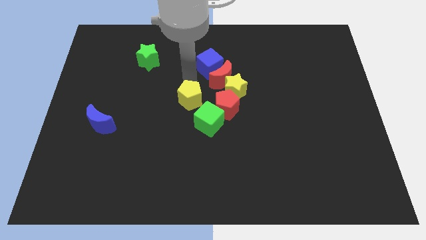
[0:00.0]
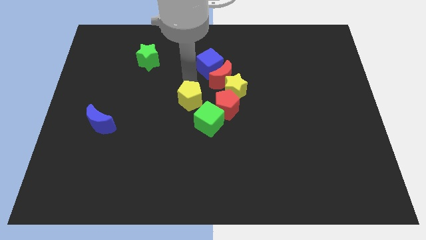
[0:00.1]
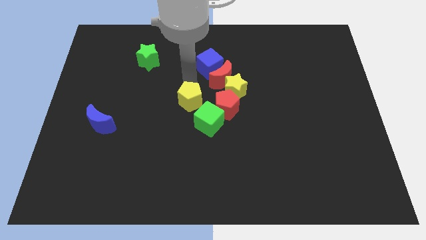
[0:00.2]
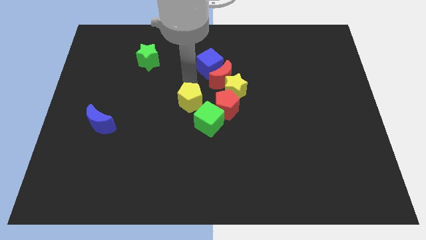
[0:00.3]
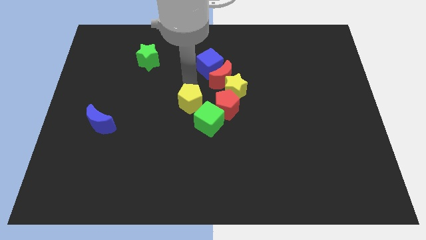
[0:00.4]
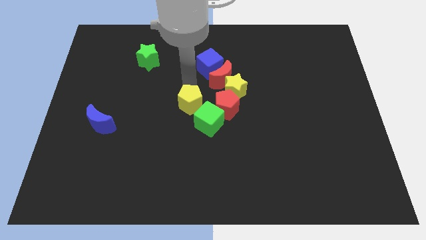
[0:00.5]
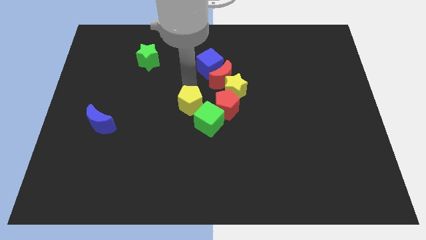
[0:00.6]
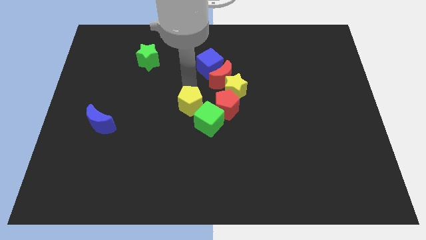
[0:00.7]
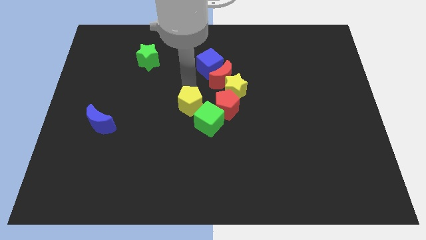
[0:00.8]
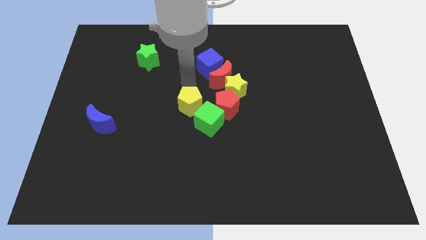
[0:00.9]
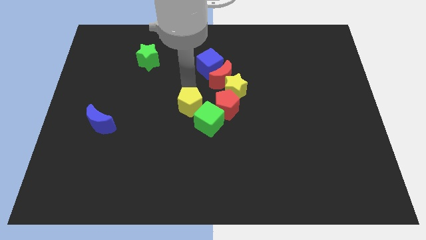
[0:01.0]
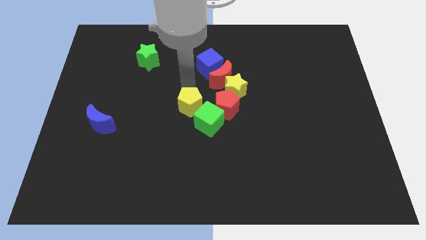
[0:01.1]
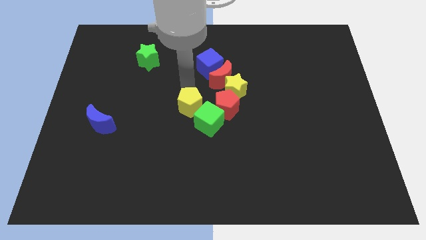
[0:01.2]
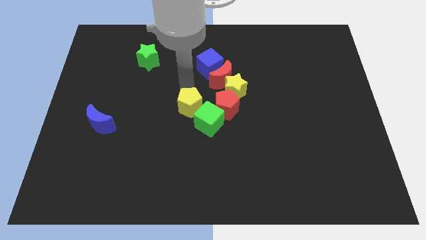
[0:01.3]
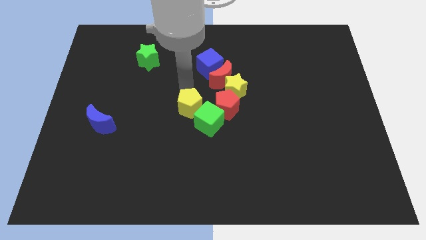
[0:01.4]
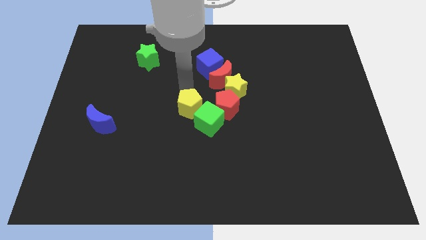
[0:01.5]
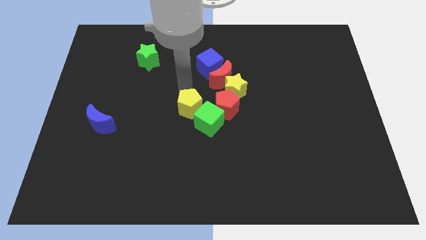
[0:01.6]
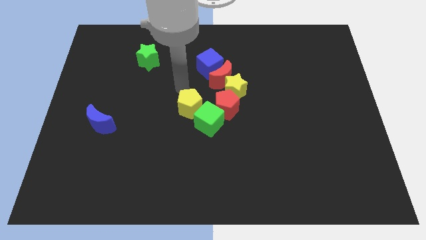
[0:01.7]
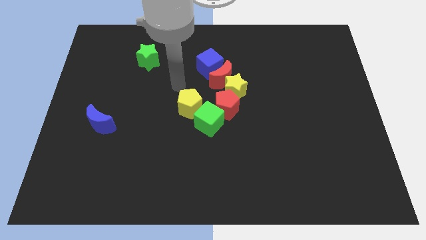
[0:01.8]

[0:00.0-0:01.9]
move the yellow pentagon towards the green cube

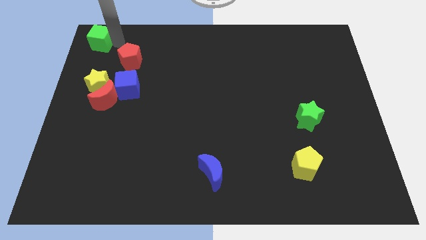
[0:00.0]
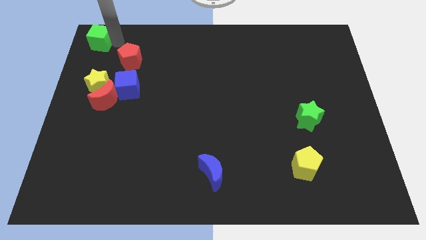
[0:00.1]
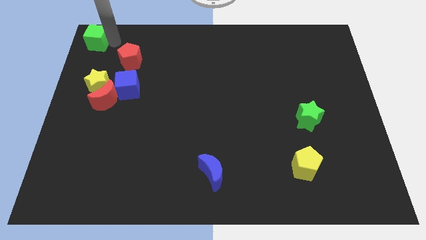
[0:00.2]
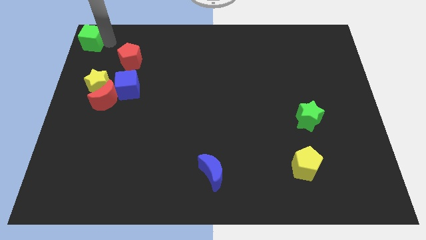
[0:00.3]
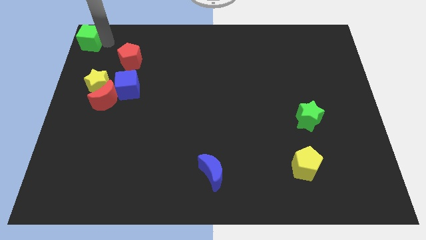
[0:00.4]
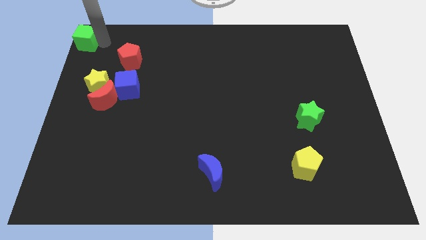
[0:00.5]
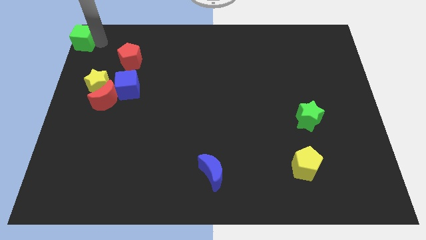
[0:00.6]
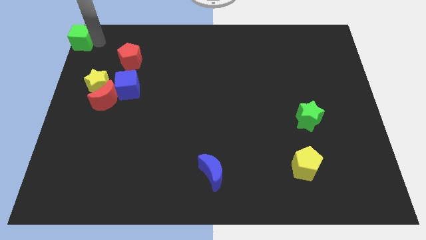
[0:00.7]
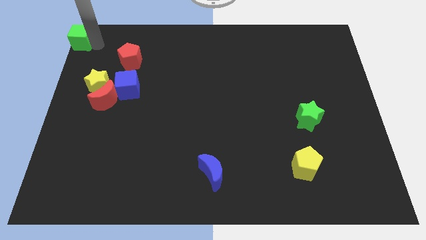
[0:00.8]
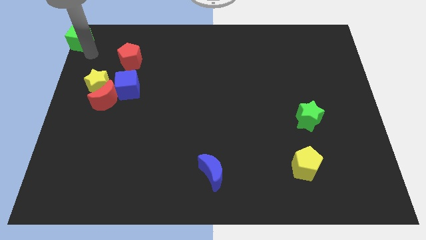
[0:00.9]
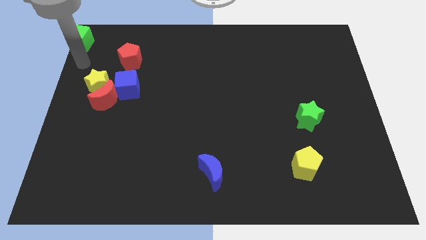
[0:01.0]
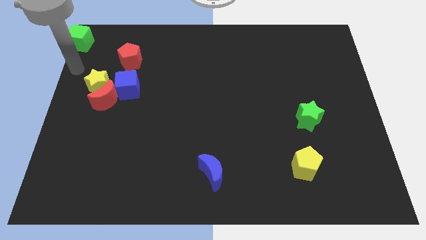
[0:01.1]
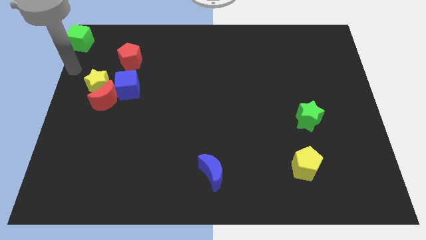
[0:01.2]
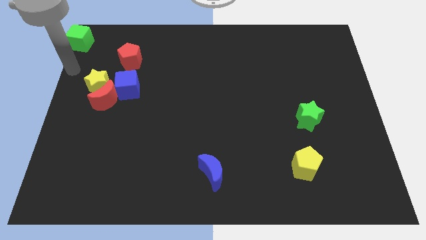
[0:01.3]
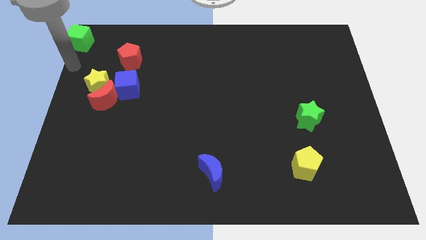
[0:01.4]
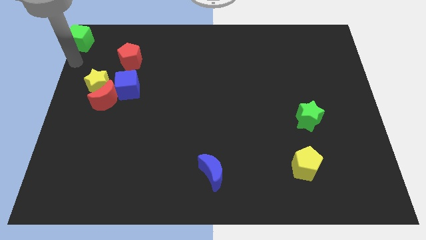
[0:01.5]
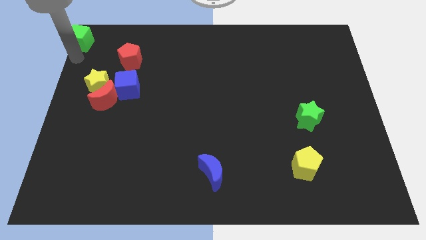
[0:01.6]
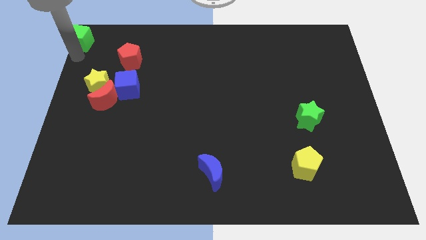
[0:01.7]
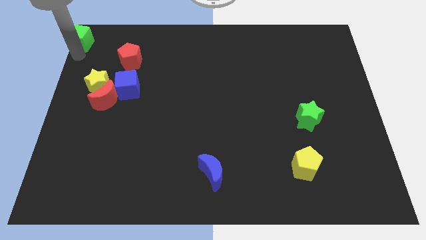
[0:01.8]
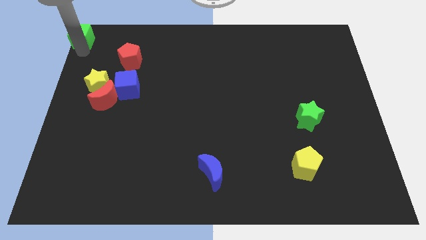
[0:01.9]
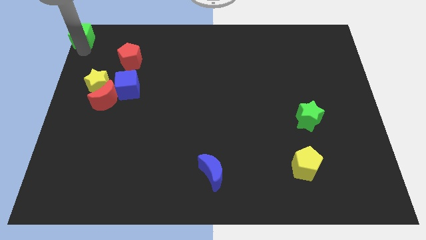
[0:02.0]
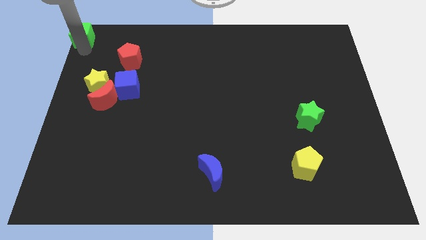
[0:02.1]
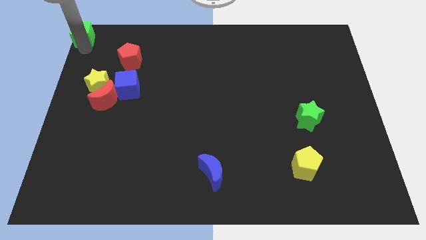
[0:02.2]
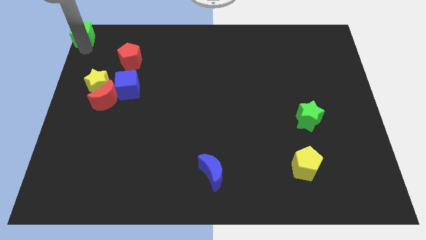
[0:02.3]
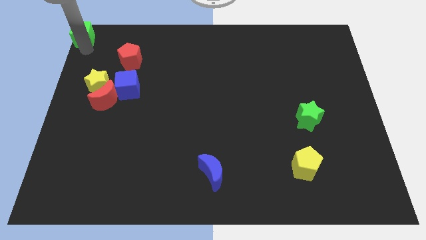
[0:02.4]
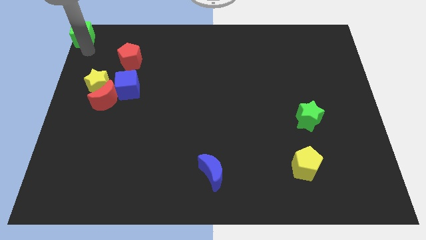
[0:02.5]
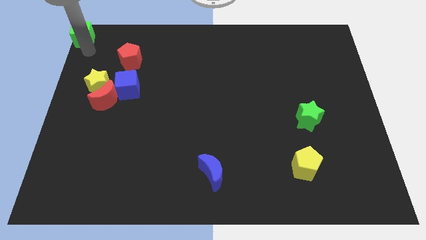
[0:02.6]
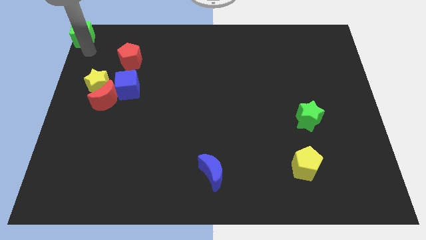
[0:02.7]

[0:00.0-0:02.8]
move the green cube to the top left corner of the board

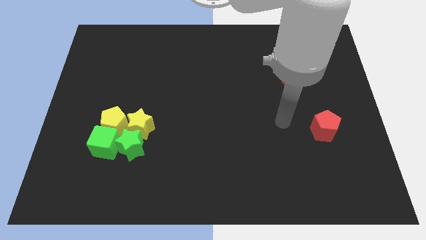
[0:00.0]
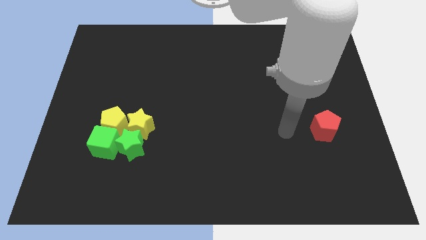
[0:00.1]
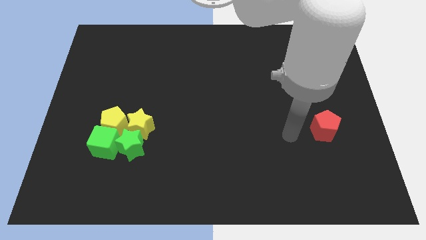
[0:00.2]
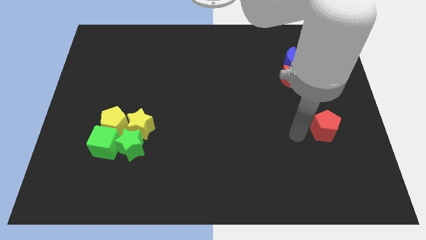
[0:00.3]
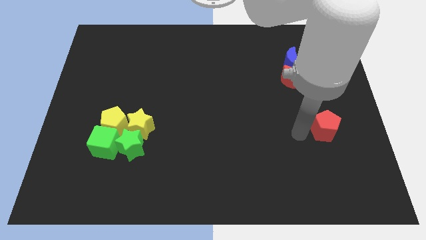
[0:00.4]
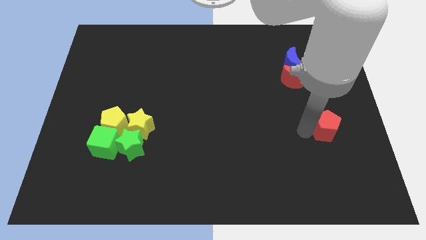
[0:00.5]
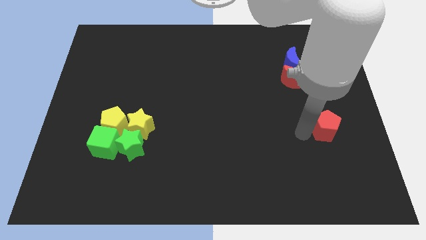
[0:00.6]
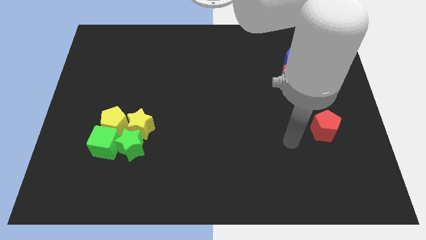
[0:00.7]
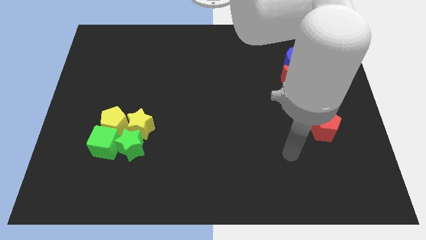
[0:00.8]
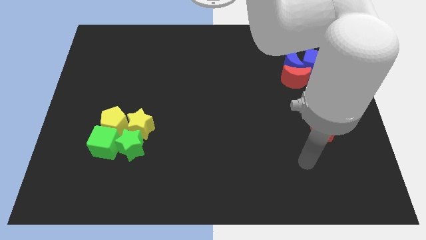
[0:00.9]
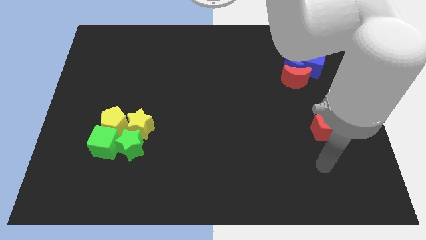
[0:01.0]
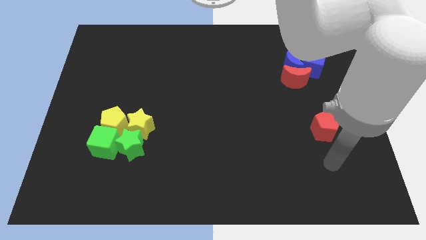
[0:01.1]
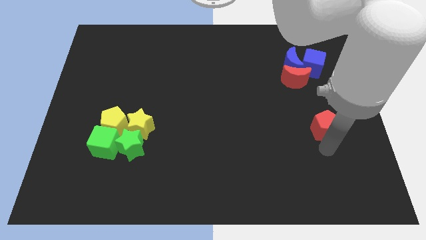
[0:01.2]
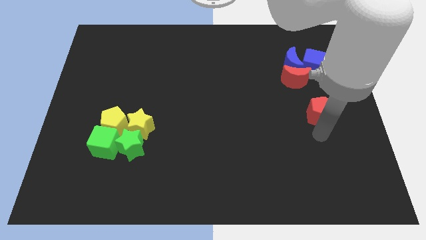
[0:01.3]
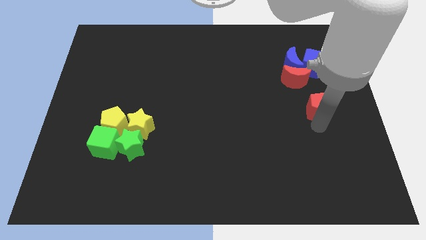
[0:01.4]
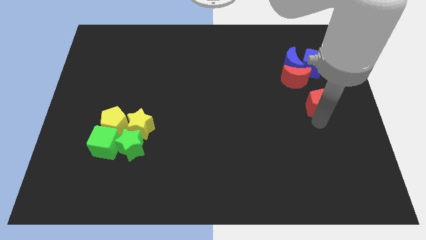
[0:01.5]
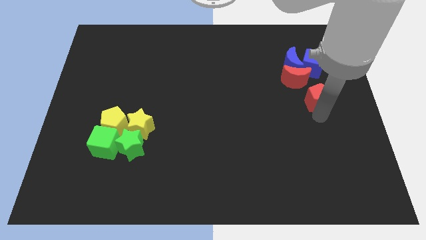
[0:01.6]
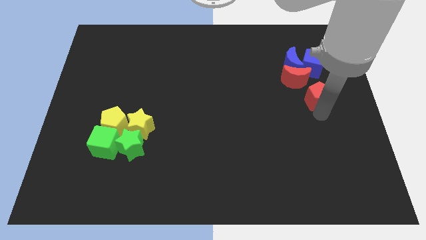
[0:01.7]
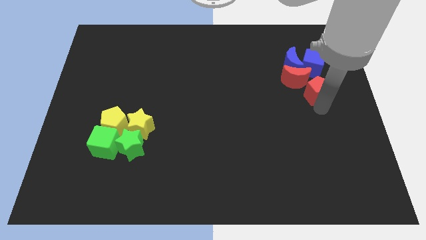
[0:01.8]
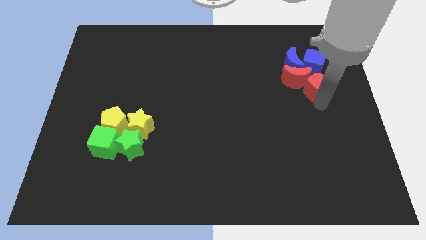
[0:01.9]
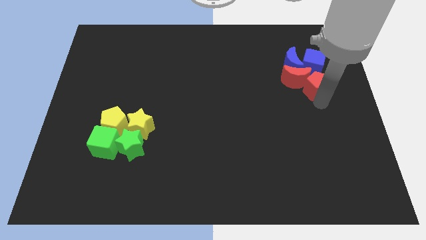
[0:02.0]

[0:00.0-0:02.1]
move the red pentagon below the blue cube

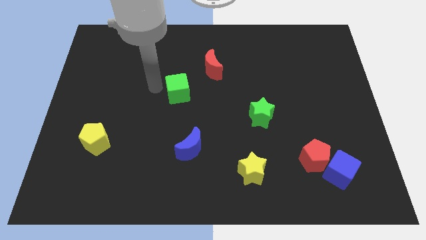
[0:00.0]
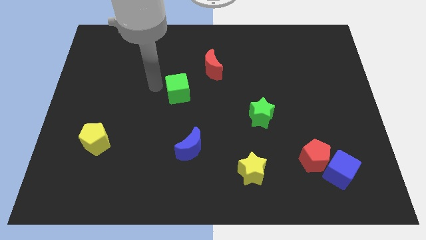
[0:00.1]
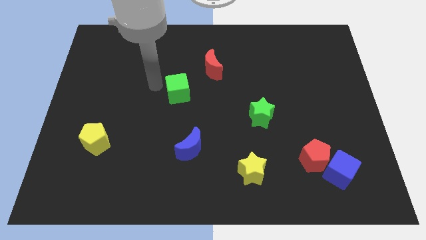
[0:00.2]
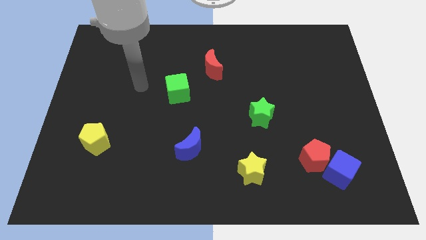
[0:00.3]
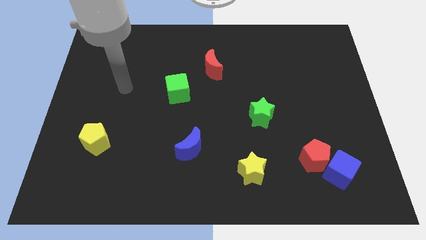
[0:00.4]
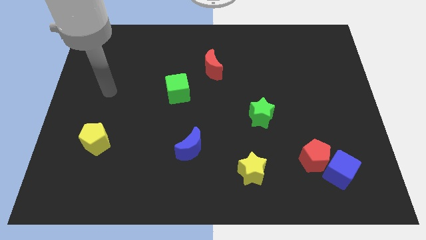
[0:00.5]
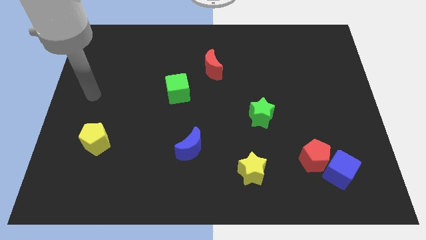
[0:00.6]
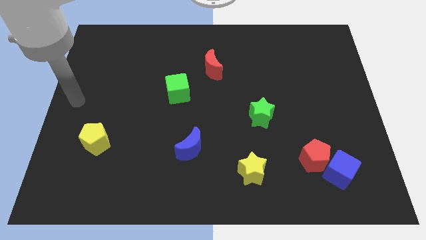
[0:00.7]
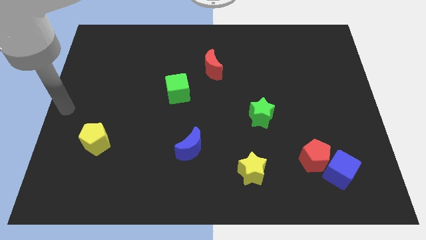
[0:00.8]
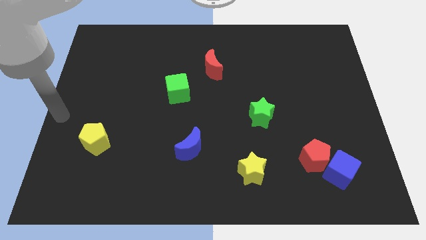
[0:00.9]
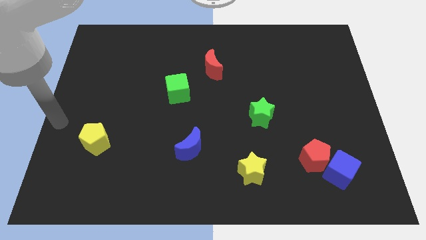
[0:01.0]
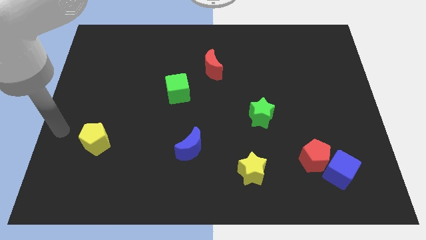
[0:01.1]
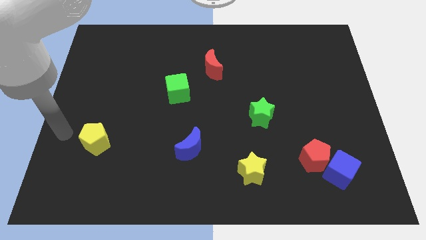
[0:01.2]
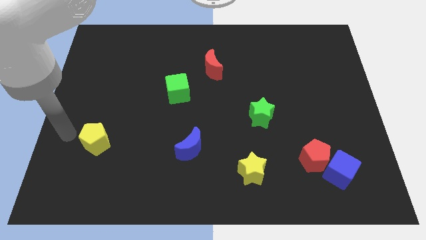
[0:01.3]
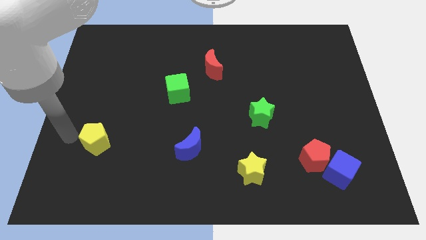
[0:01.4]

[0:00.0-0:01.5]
point your hand at the left side of the yellow pentagon

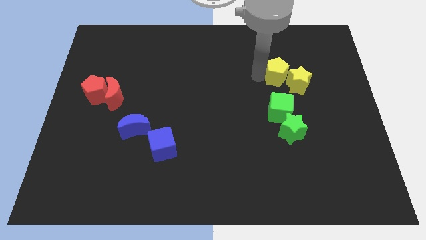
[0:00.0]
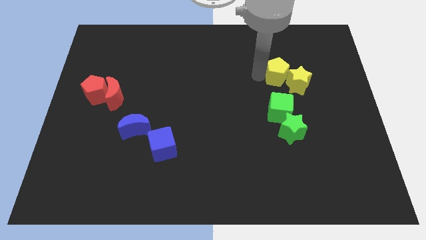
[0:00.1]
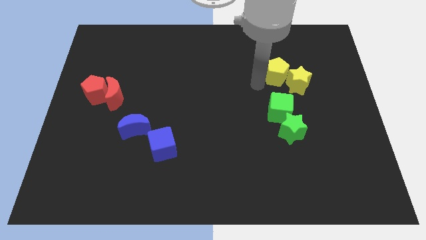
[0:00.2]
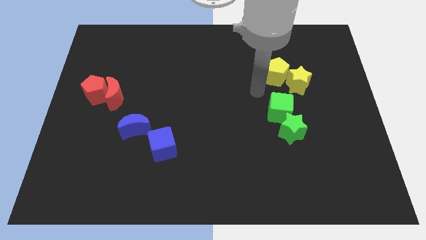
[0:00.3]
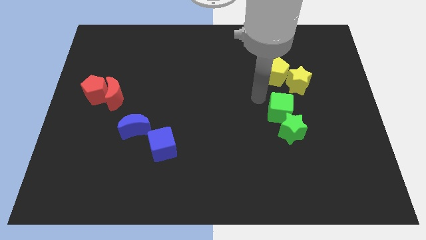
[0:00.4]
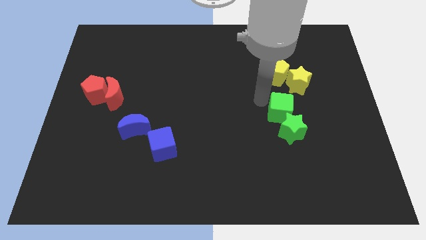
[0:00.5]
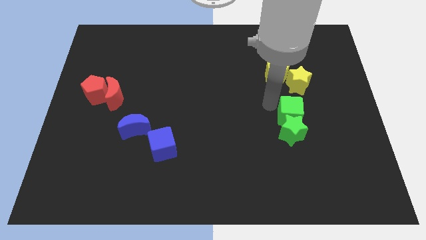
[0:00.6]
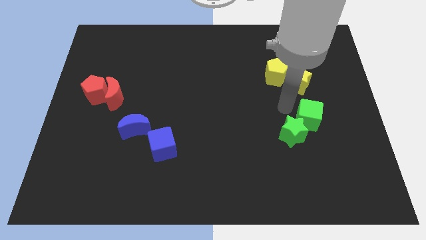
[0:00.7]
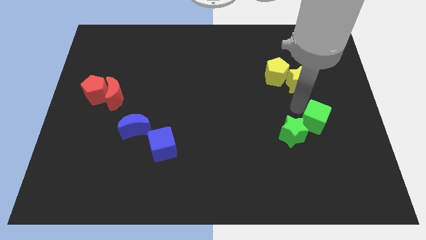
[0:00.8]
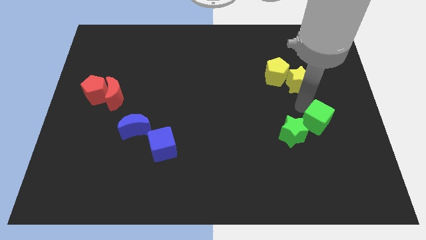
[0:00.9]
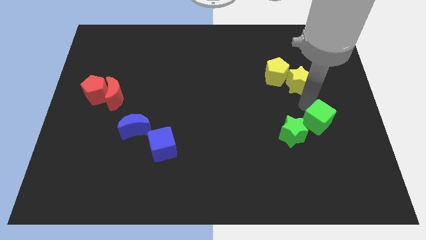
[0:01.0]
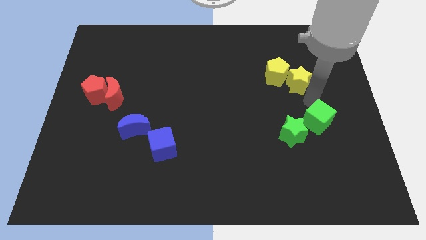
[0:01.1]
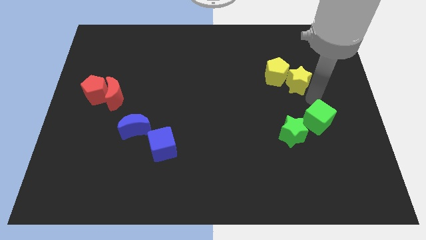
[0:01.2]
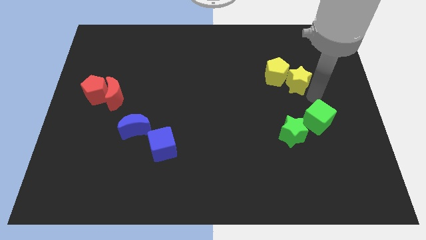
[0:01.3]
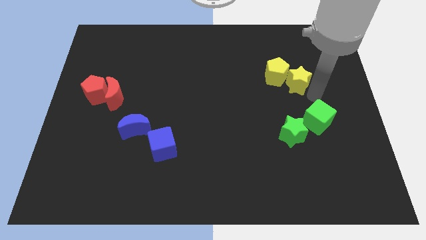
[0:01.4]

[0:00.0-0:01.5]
move the green cube to the top right side of the green star
